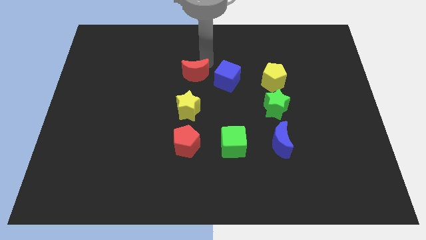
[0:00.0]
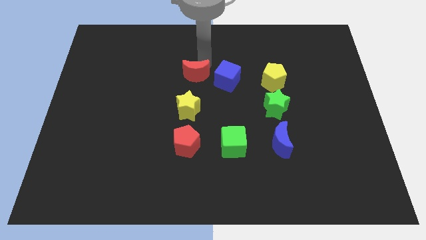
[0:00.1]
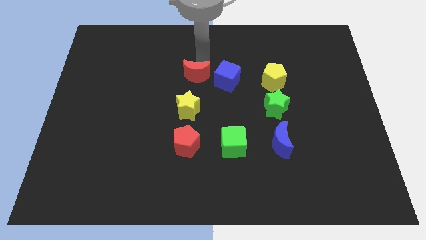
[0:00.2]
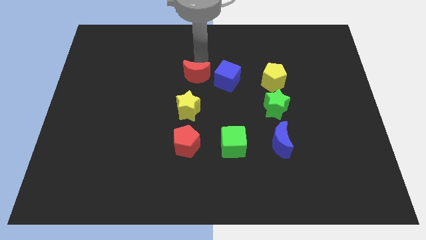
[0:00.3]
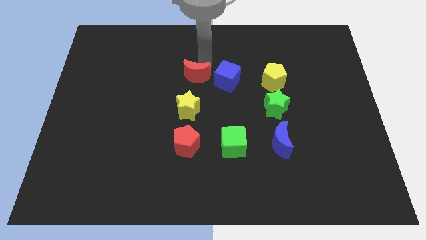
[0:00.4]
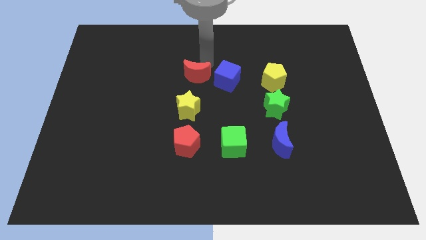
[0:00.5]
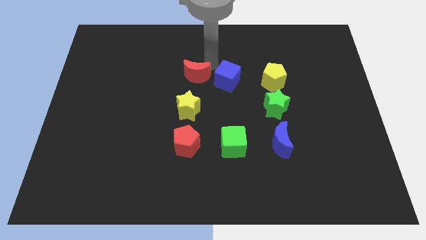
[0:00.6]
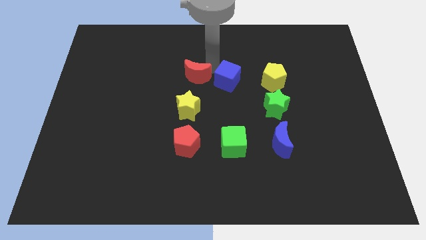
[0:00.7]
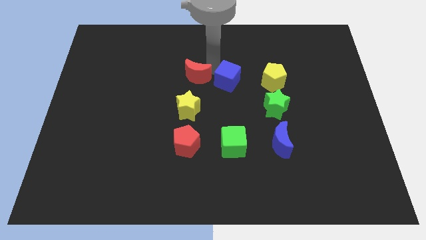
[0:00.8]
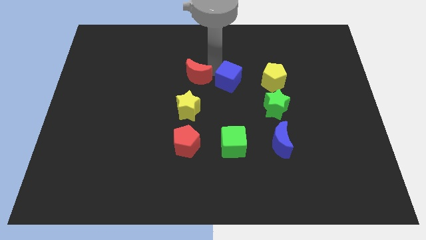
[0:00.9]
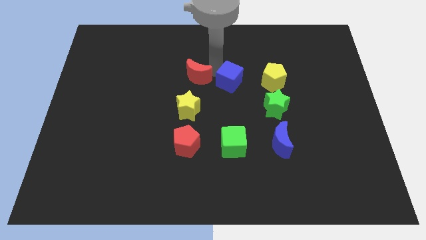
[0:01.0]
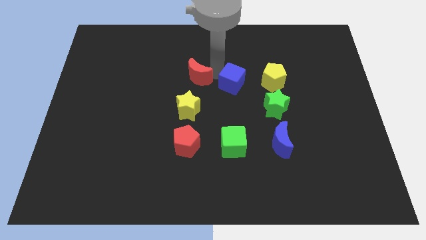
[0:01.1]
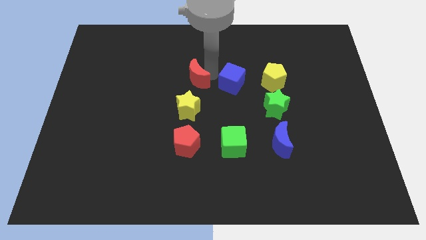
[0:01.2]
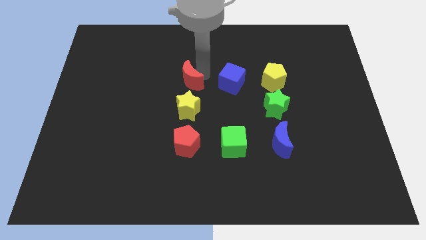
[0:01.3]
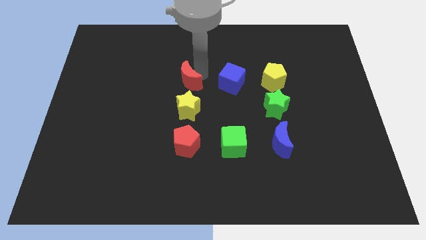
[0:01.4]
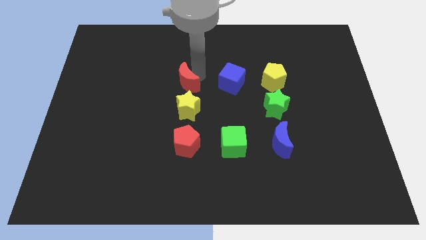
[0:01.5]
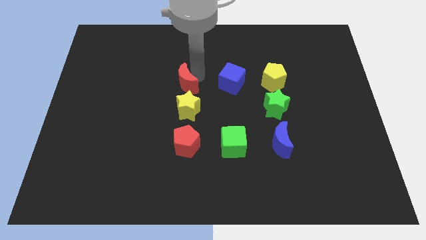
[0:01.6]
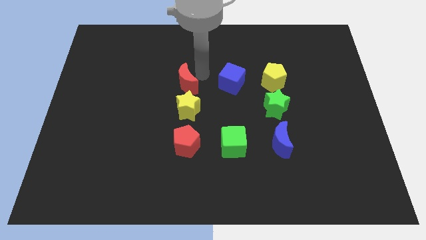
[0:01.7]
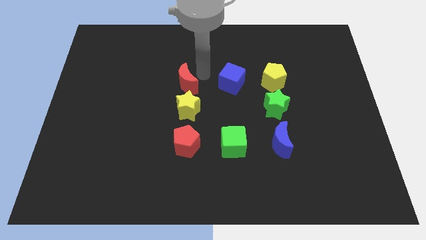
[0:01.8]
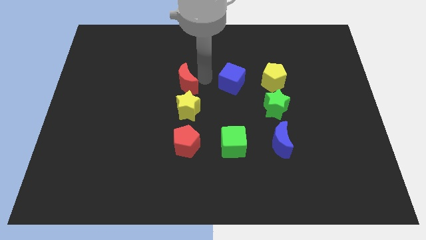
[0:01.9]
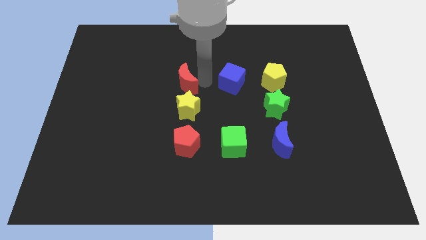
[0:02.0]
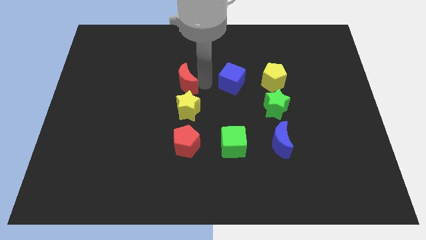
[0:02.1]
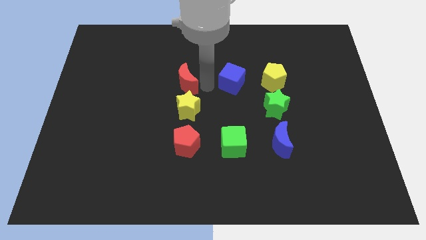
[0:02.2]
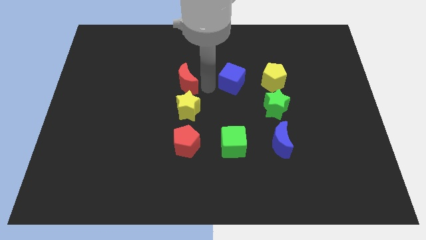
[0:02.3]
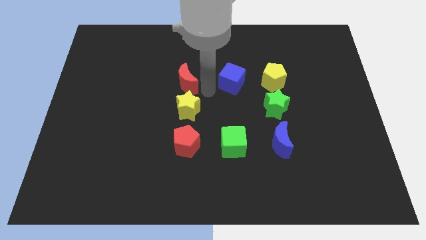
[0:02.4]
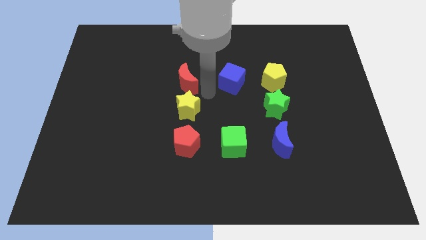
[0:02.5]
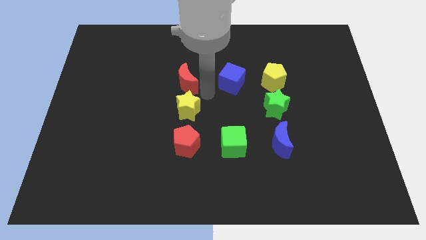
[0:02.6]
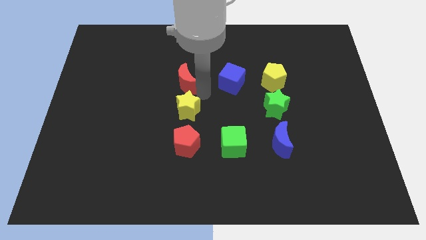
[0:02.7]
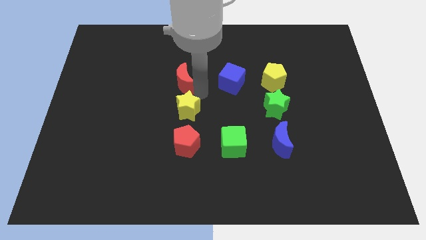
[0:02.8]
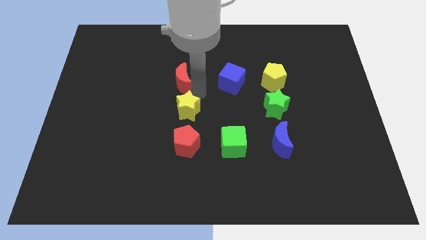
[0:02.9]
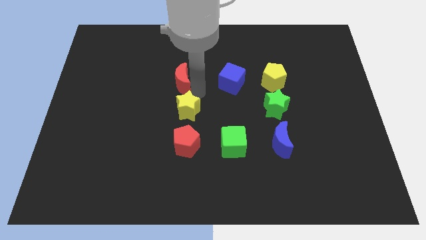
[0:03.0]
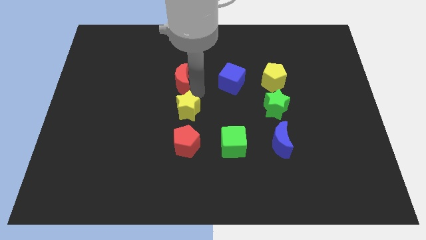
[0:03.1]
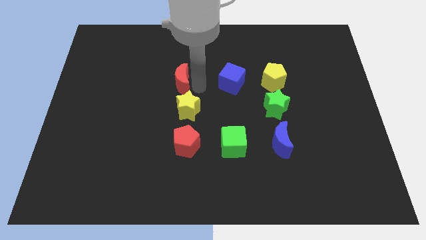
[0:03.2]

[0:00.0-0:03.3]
slide the red moon close to the top side of the yellow star

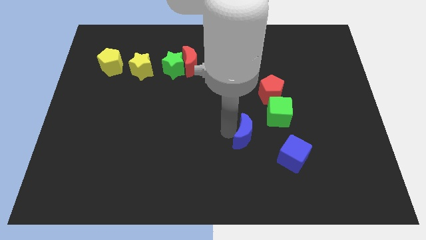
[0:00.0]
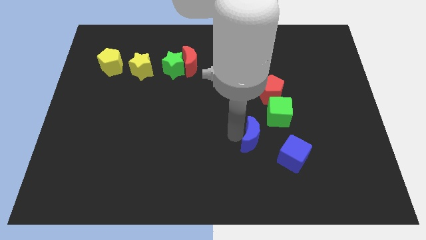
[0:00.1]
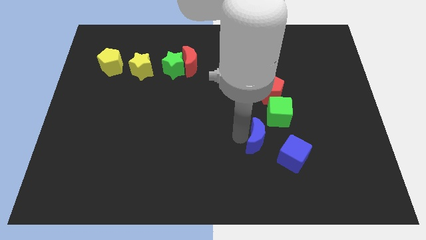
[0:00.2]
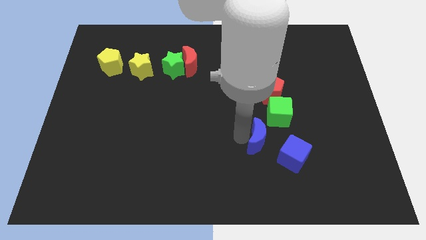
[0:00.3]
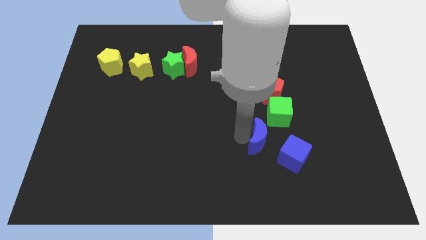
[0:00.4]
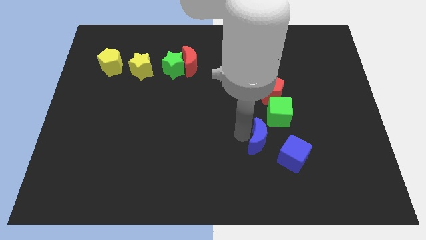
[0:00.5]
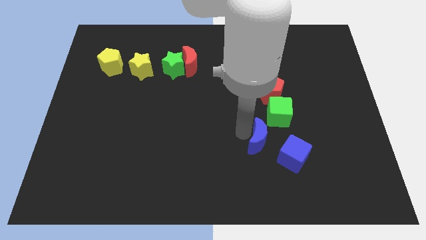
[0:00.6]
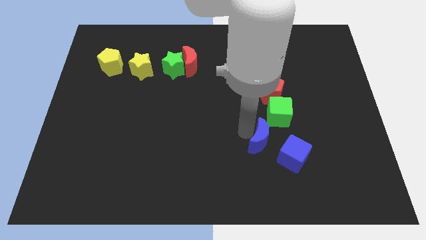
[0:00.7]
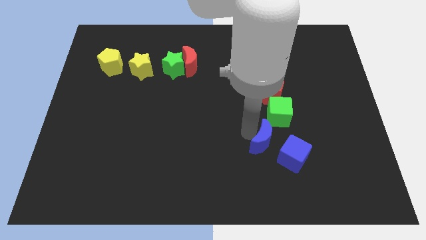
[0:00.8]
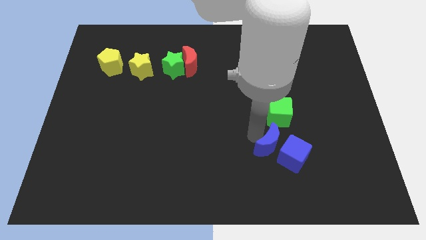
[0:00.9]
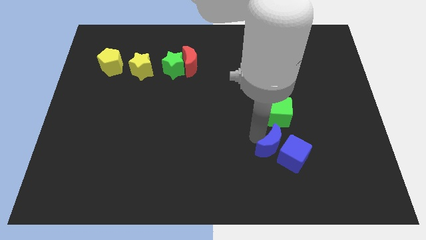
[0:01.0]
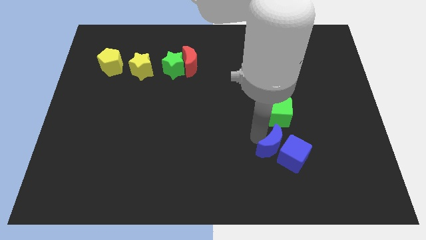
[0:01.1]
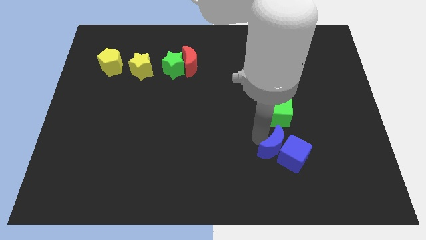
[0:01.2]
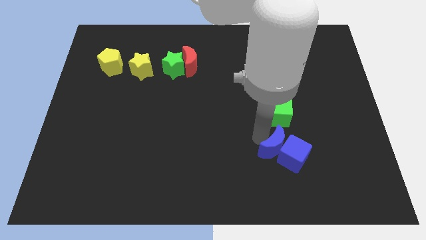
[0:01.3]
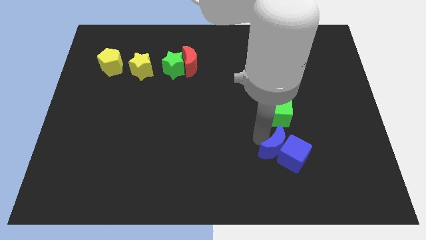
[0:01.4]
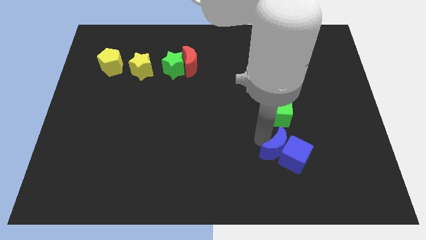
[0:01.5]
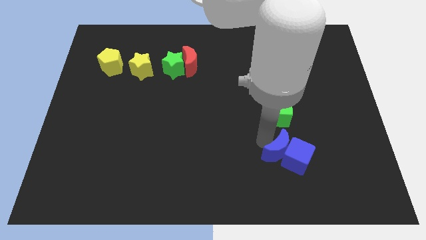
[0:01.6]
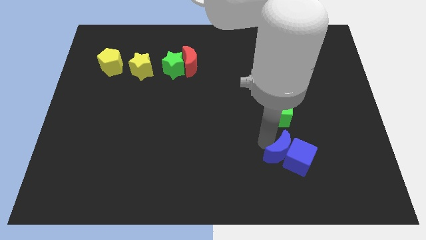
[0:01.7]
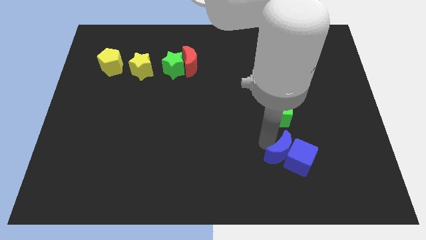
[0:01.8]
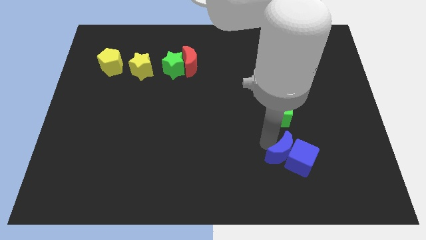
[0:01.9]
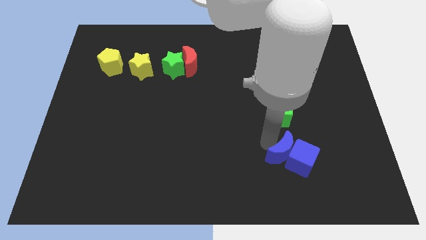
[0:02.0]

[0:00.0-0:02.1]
push blue cube and blue moon to the bottom right of the board

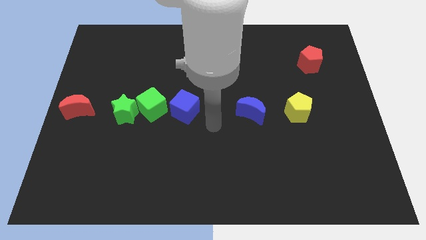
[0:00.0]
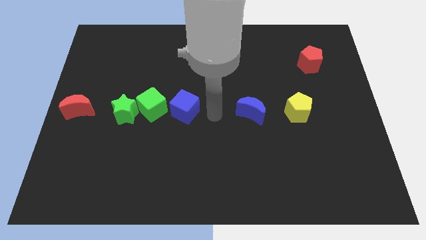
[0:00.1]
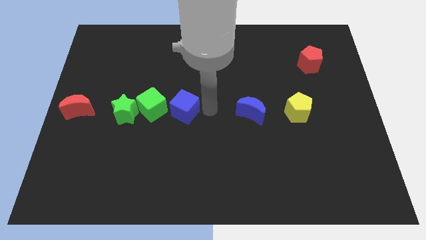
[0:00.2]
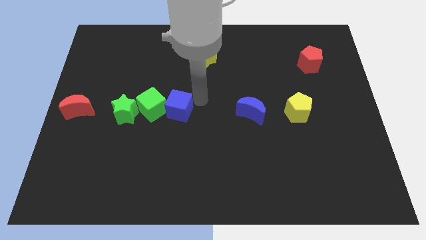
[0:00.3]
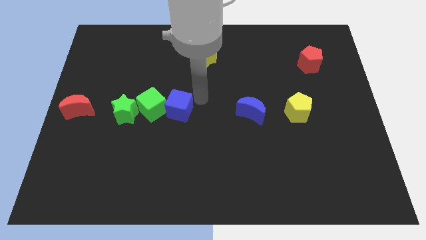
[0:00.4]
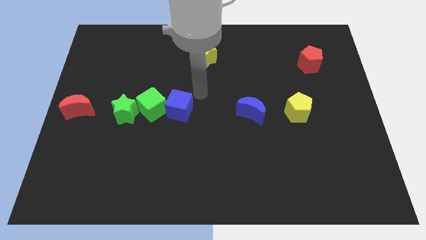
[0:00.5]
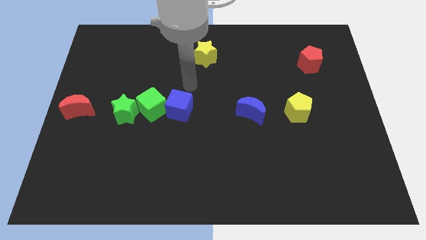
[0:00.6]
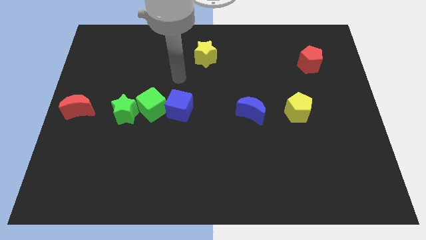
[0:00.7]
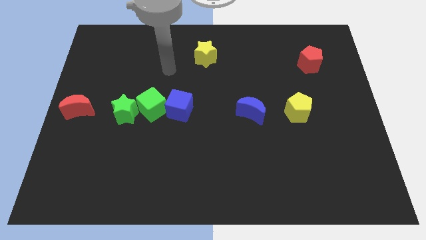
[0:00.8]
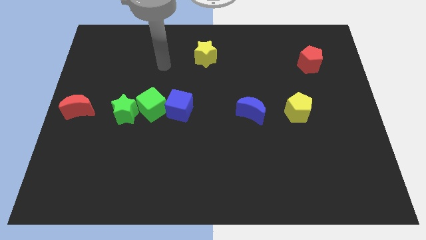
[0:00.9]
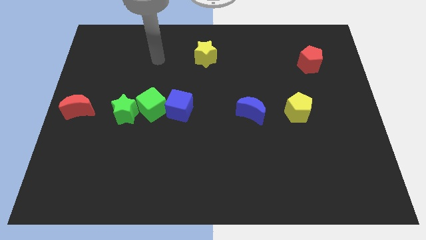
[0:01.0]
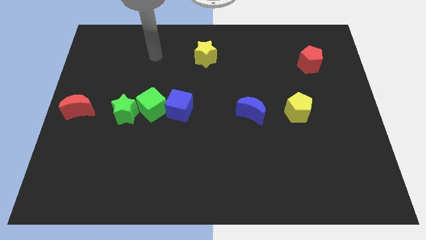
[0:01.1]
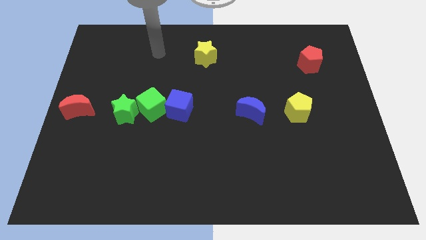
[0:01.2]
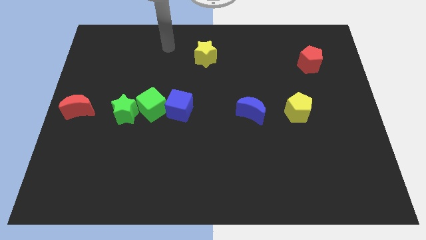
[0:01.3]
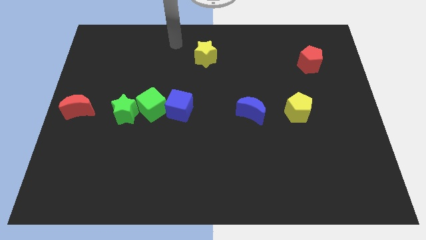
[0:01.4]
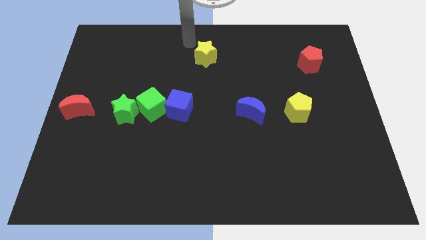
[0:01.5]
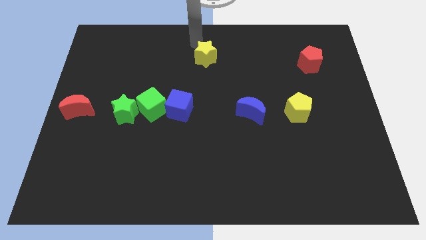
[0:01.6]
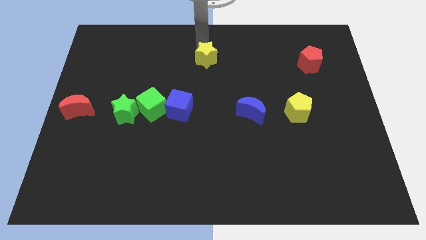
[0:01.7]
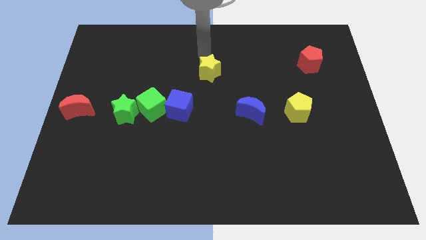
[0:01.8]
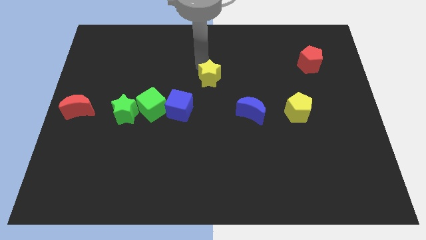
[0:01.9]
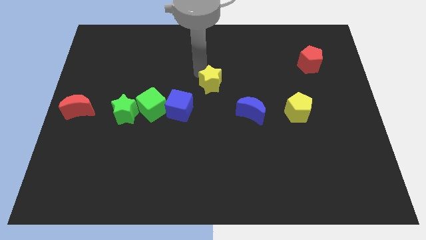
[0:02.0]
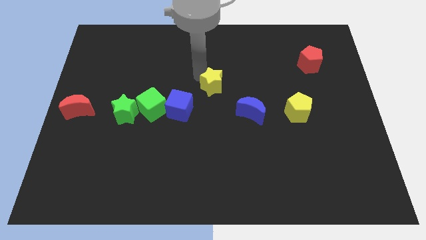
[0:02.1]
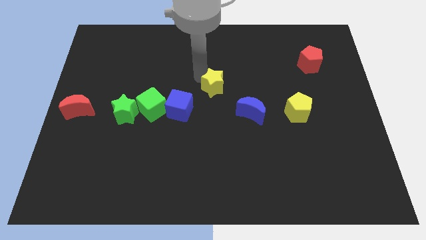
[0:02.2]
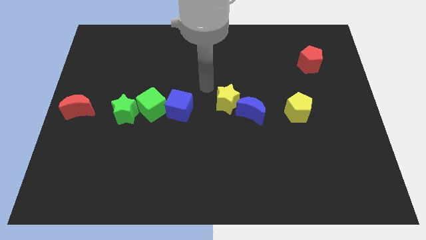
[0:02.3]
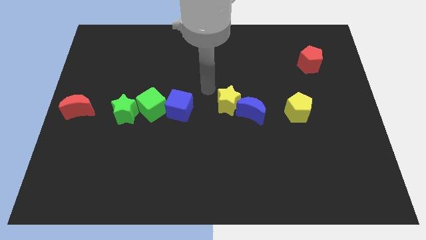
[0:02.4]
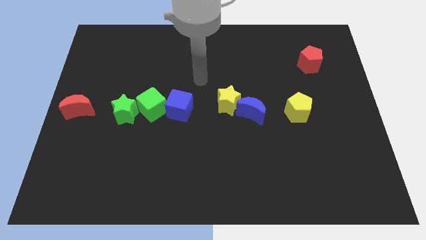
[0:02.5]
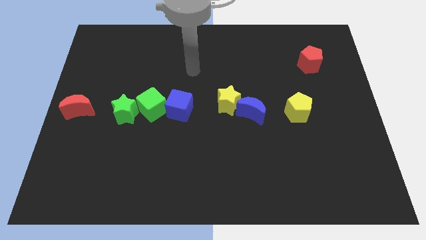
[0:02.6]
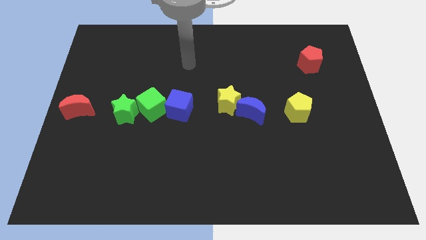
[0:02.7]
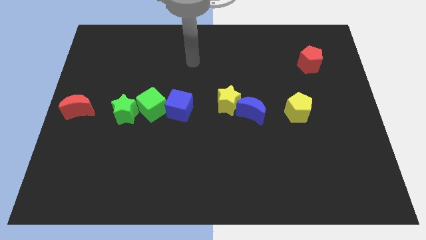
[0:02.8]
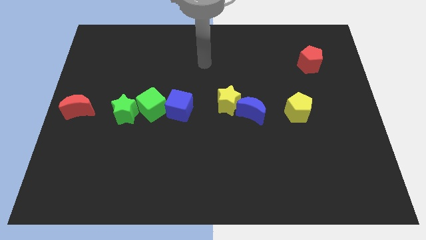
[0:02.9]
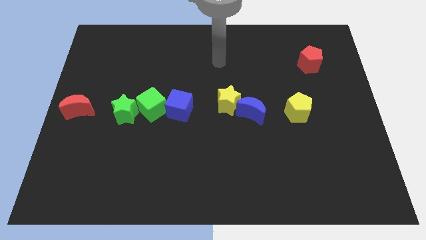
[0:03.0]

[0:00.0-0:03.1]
place the yellow star in between the blue moon and blue cube

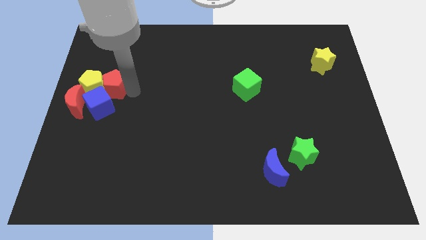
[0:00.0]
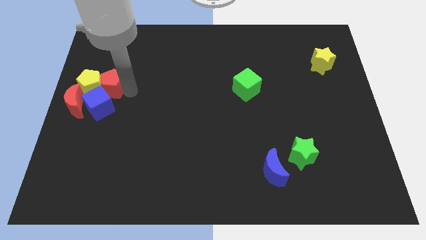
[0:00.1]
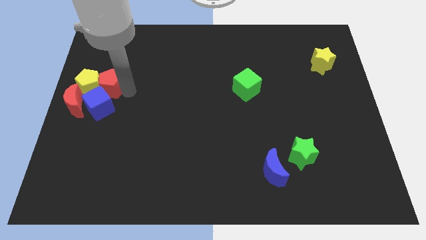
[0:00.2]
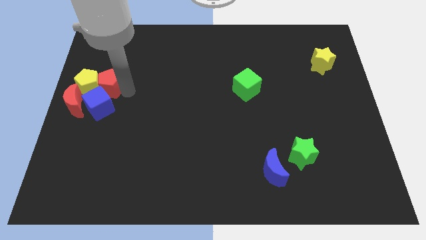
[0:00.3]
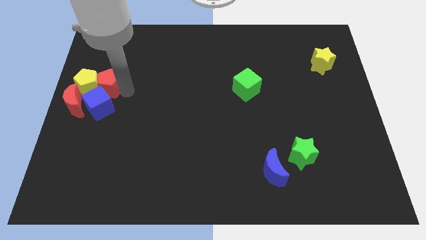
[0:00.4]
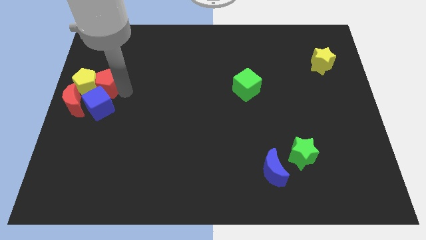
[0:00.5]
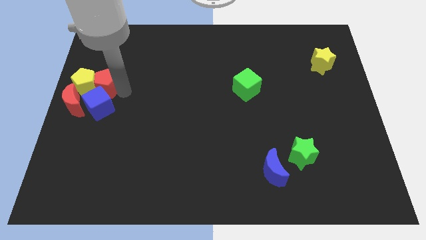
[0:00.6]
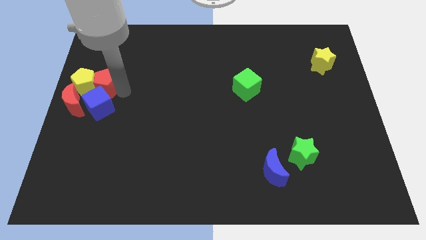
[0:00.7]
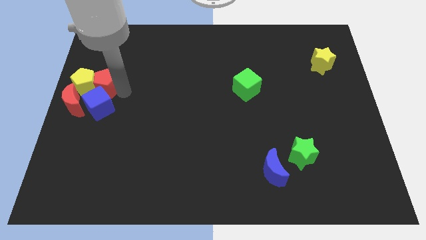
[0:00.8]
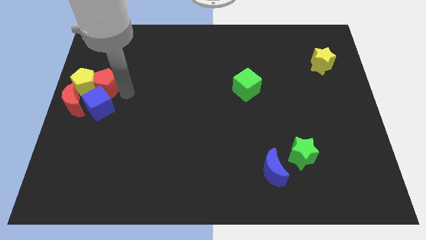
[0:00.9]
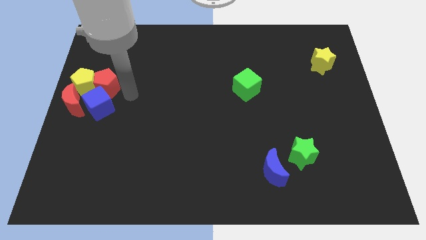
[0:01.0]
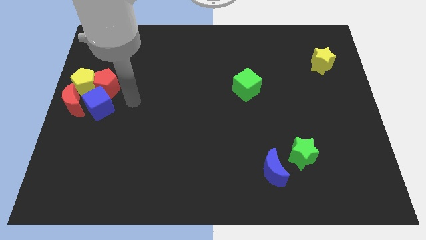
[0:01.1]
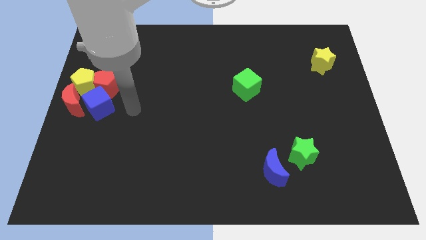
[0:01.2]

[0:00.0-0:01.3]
move the red pentagon into the yellow pentagon
